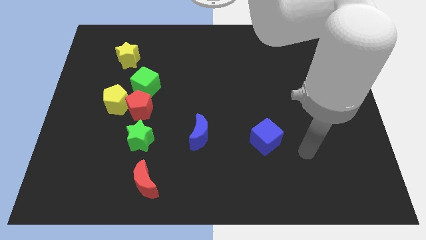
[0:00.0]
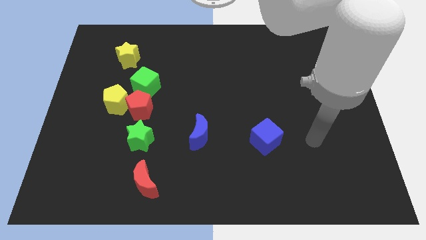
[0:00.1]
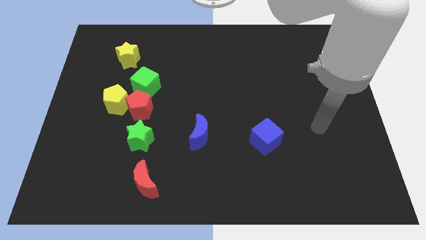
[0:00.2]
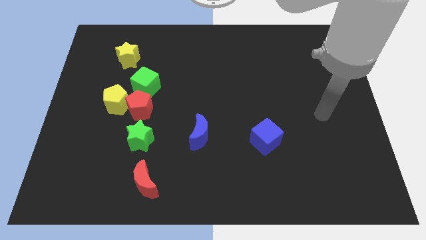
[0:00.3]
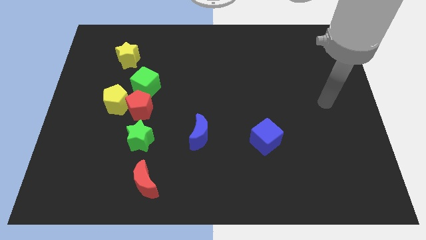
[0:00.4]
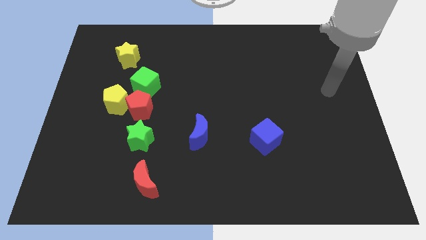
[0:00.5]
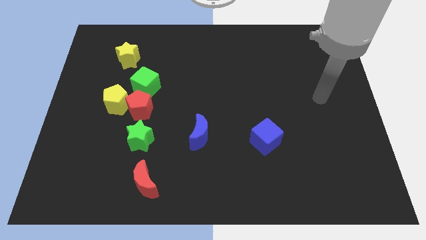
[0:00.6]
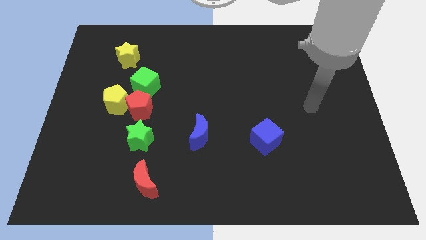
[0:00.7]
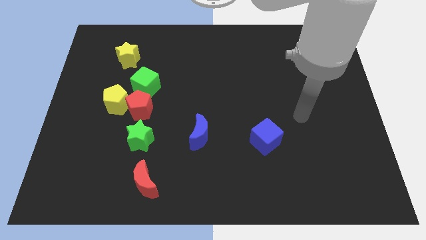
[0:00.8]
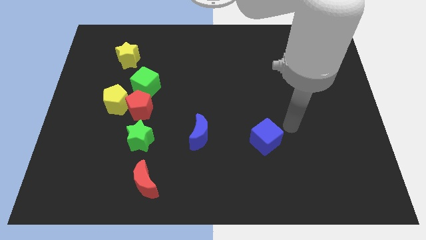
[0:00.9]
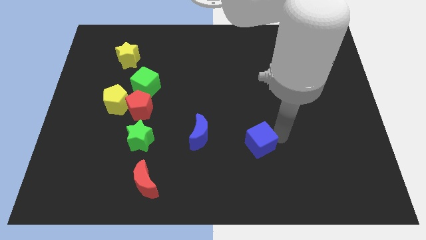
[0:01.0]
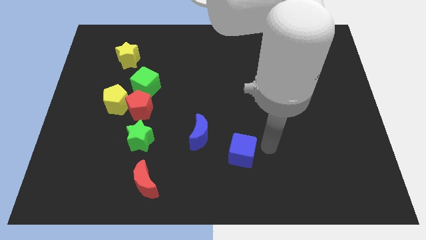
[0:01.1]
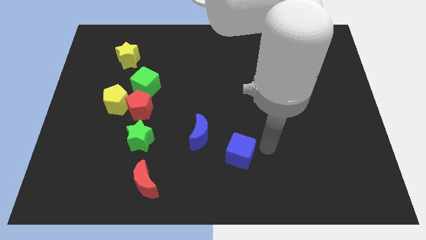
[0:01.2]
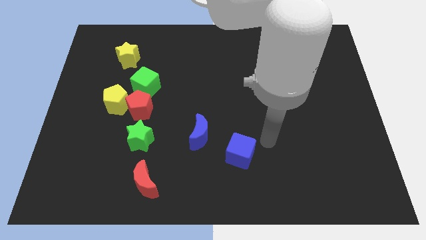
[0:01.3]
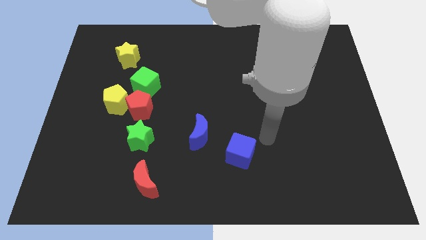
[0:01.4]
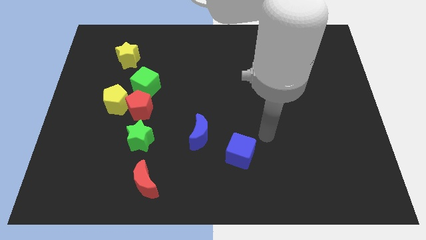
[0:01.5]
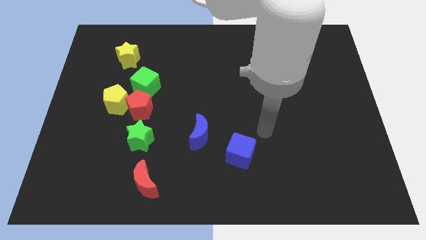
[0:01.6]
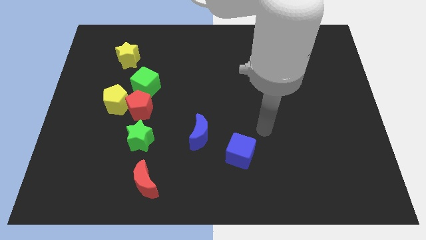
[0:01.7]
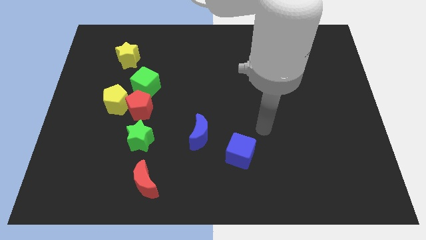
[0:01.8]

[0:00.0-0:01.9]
push the blue cube slightly to the bottom of the board

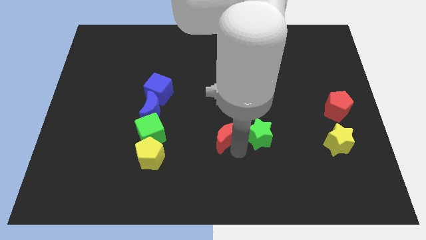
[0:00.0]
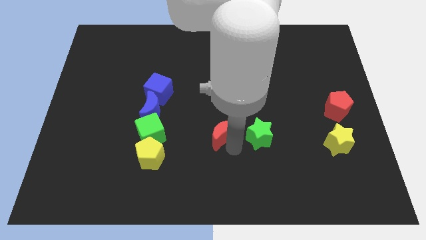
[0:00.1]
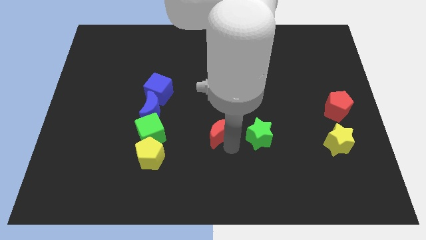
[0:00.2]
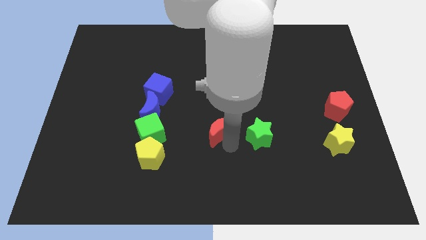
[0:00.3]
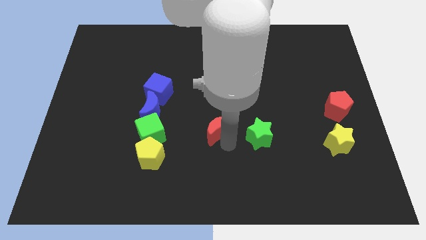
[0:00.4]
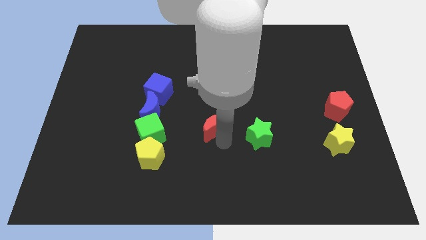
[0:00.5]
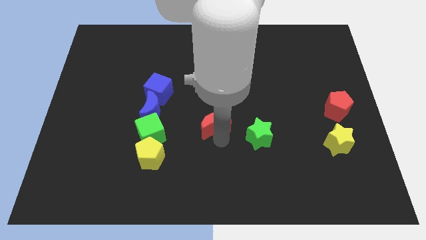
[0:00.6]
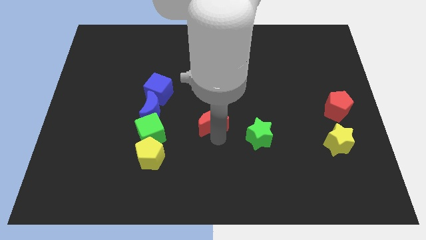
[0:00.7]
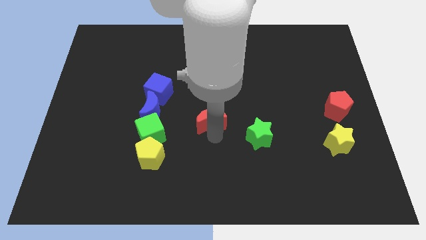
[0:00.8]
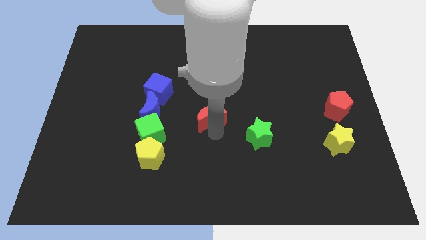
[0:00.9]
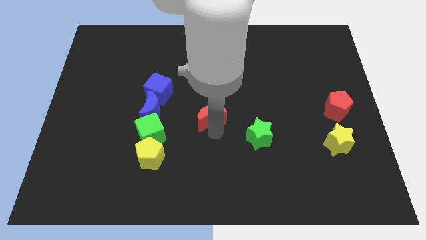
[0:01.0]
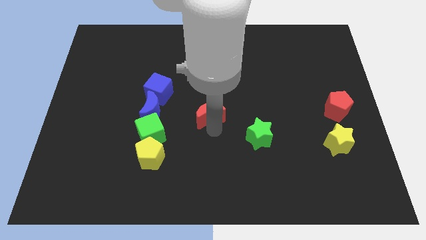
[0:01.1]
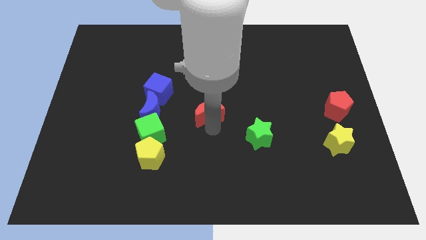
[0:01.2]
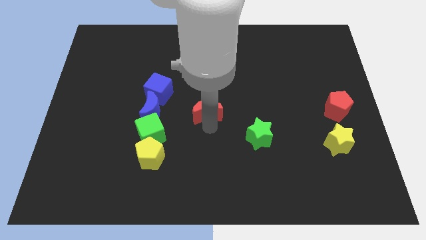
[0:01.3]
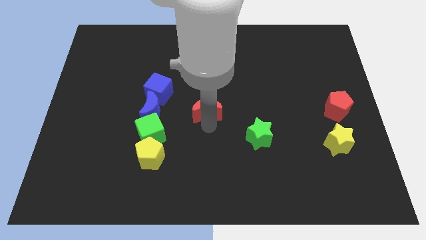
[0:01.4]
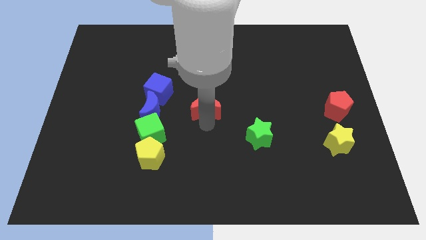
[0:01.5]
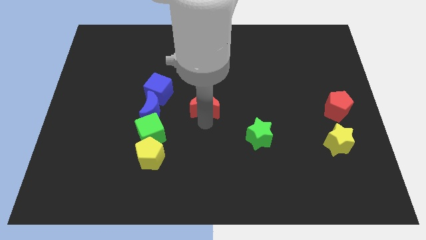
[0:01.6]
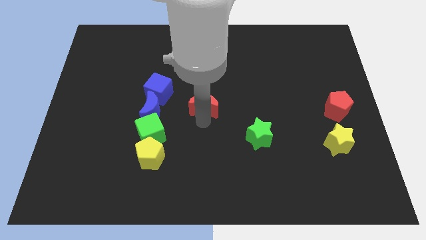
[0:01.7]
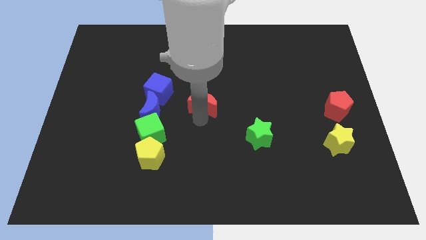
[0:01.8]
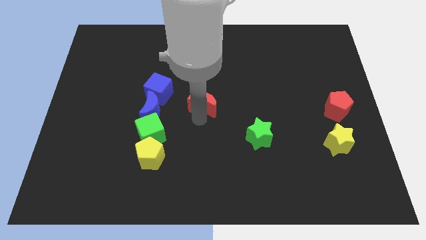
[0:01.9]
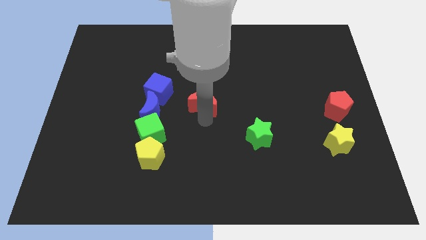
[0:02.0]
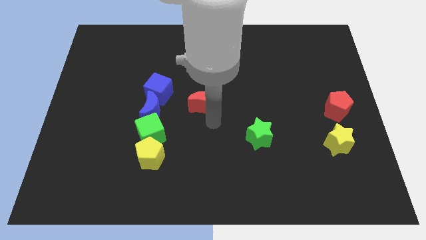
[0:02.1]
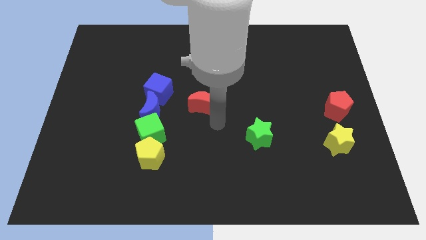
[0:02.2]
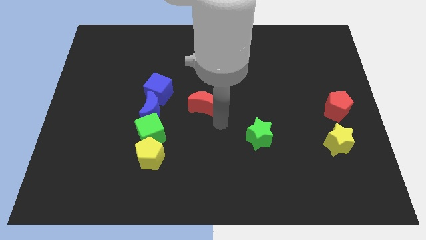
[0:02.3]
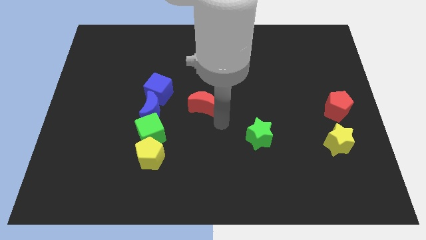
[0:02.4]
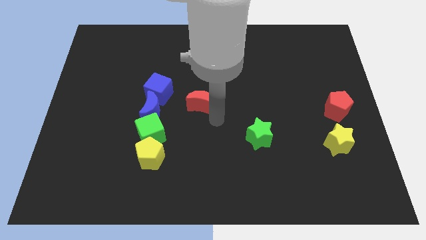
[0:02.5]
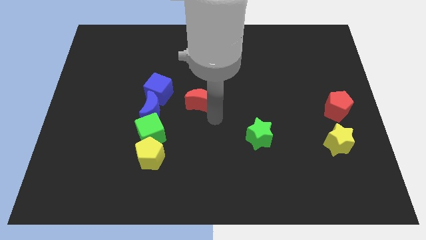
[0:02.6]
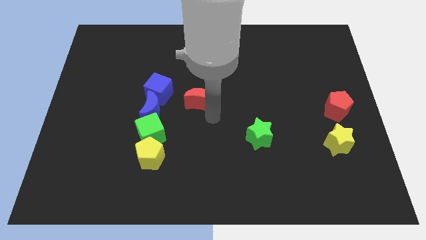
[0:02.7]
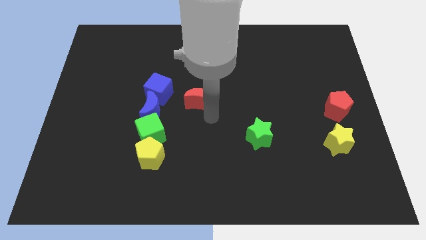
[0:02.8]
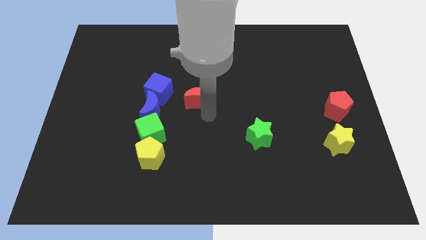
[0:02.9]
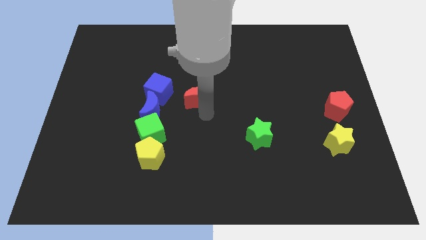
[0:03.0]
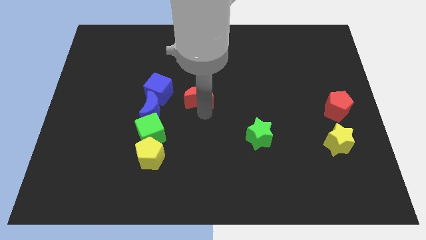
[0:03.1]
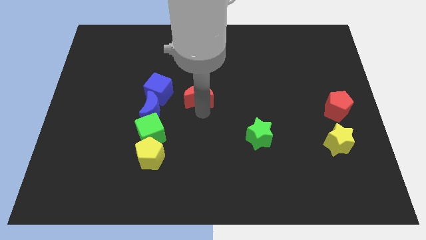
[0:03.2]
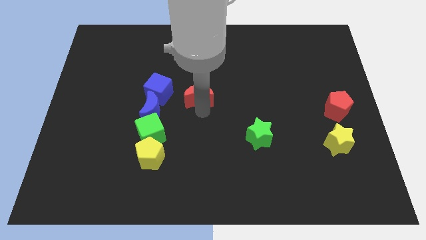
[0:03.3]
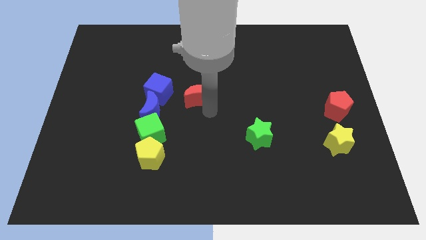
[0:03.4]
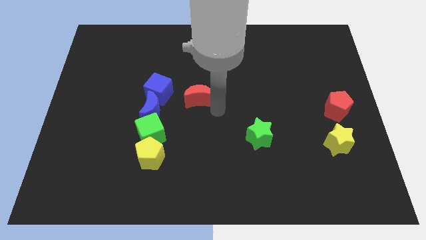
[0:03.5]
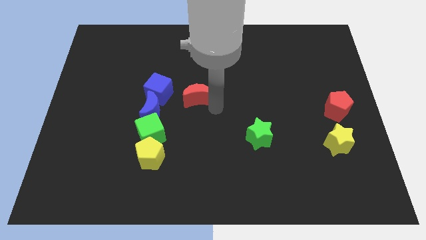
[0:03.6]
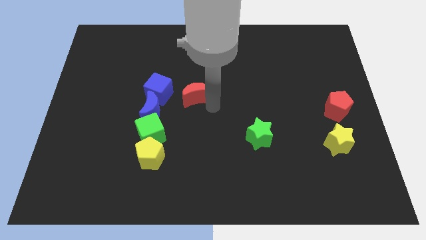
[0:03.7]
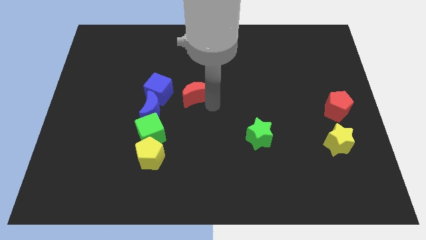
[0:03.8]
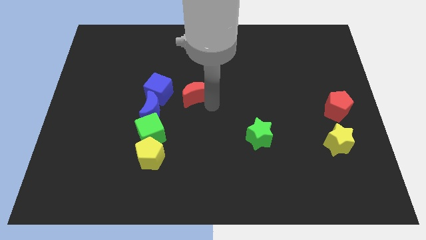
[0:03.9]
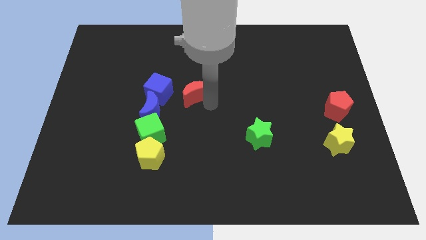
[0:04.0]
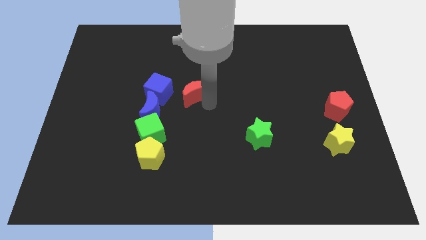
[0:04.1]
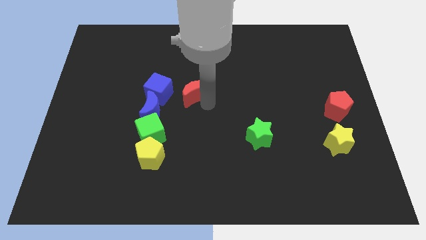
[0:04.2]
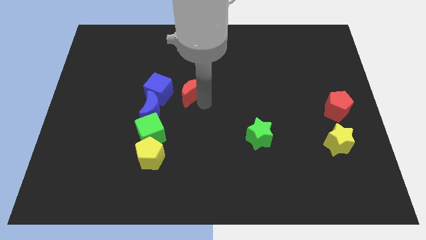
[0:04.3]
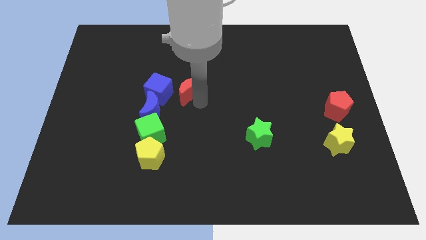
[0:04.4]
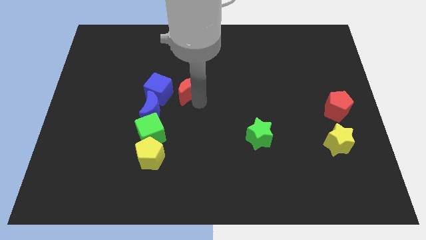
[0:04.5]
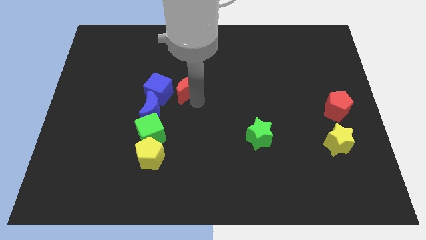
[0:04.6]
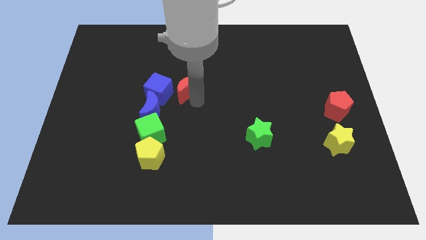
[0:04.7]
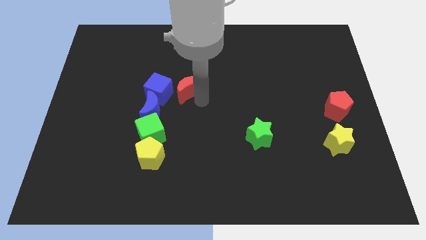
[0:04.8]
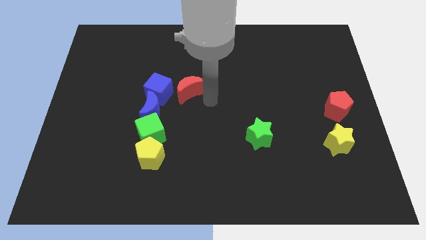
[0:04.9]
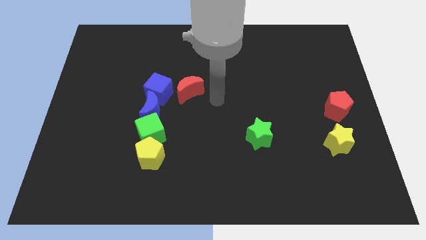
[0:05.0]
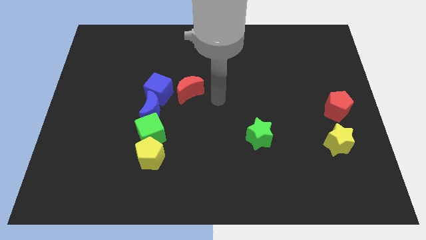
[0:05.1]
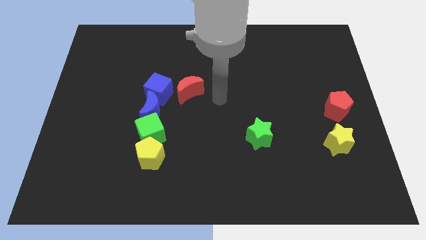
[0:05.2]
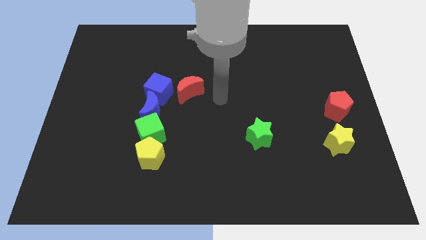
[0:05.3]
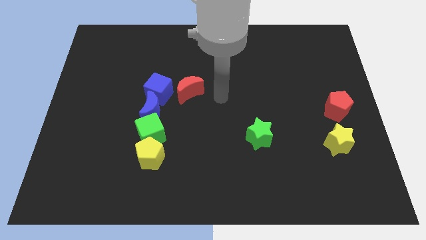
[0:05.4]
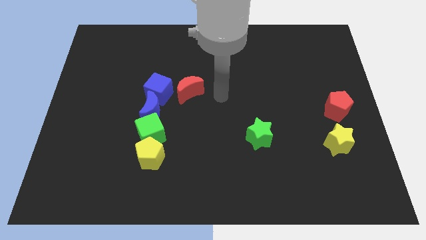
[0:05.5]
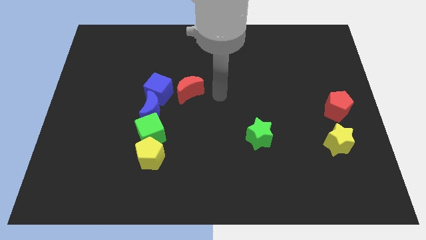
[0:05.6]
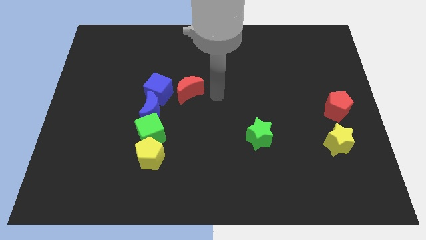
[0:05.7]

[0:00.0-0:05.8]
put the red moon on the right side of the blue cube

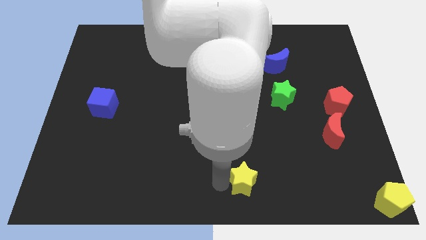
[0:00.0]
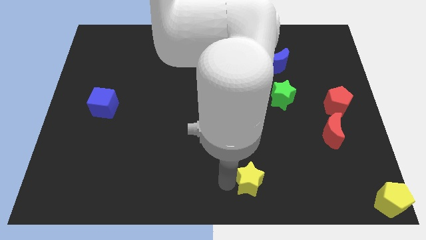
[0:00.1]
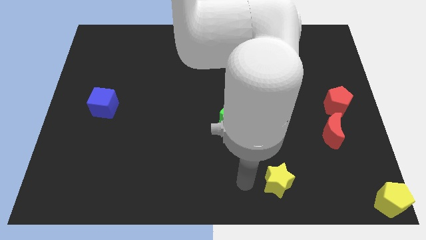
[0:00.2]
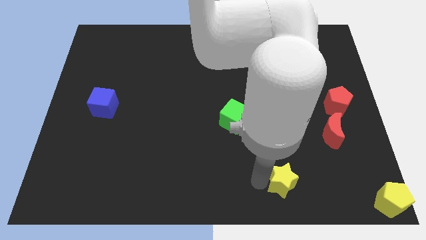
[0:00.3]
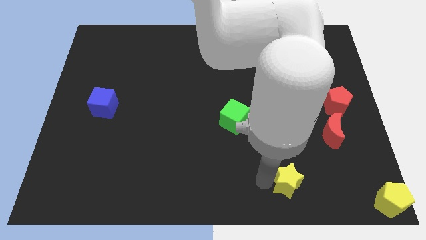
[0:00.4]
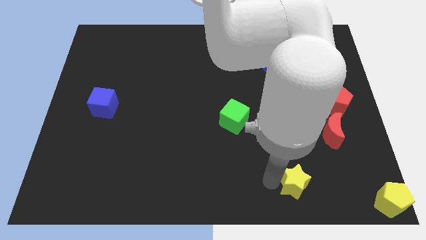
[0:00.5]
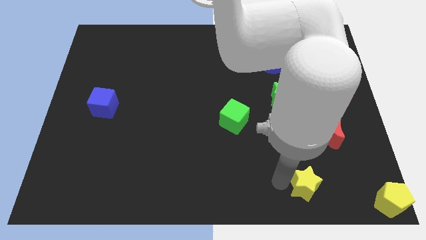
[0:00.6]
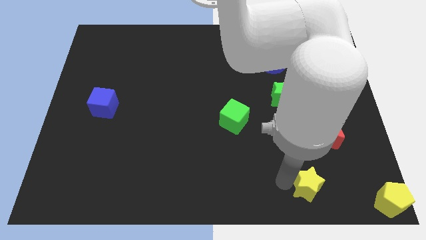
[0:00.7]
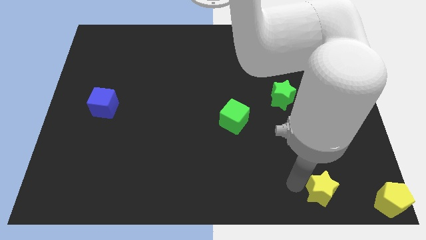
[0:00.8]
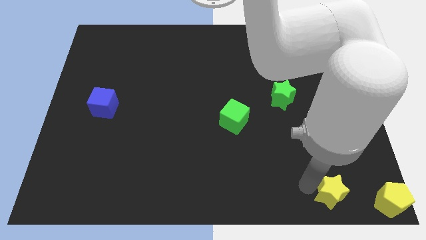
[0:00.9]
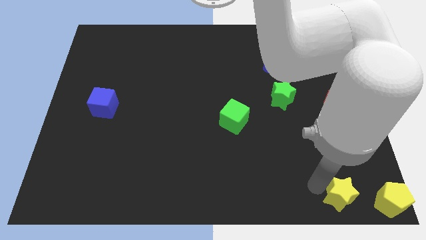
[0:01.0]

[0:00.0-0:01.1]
move the yellow star to the bottom of the red crescent
